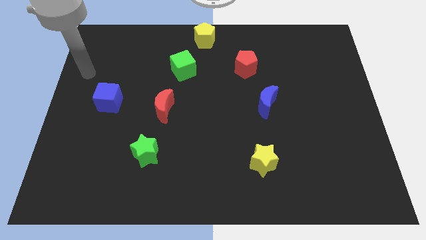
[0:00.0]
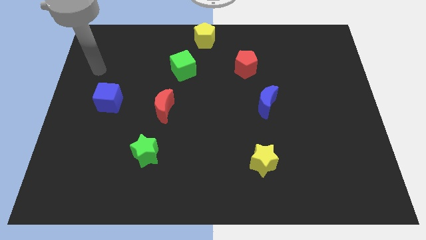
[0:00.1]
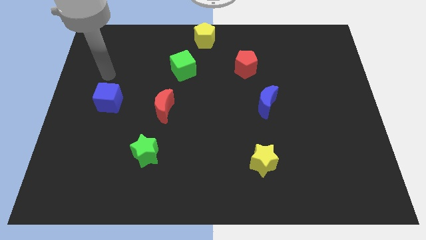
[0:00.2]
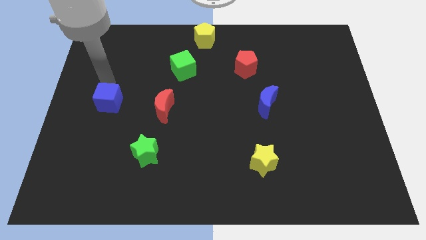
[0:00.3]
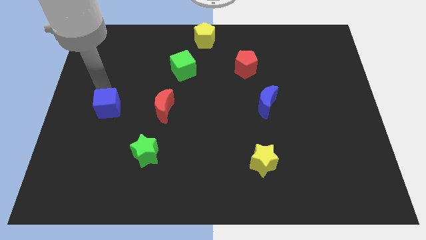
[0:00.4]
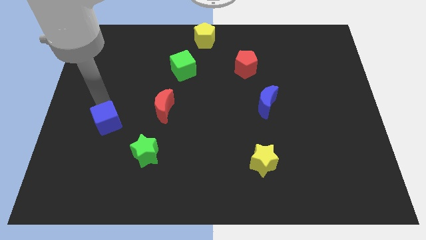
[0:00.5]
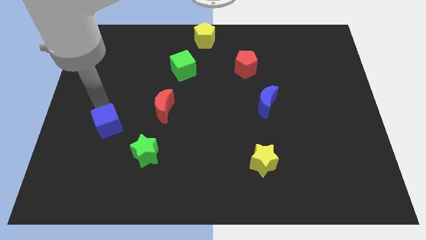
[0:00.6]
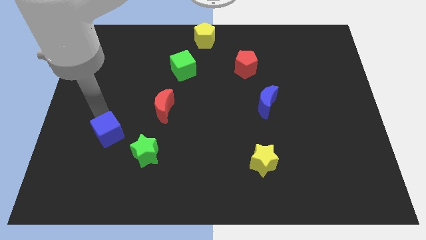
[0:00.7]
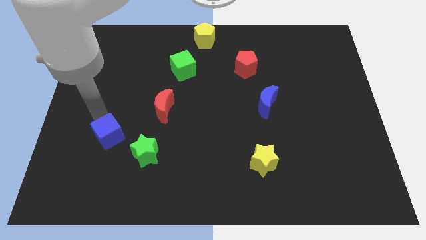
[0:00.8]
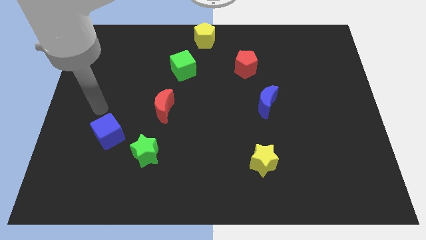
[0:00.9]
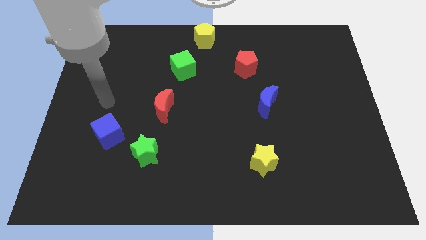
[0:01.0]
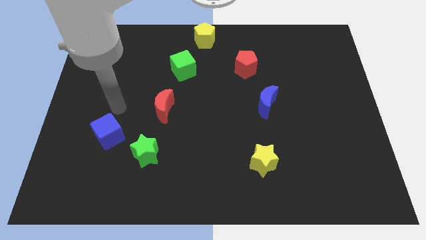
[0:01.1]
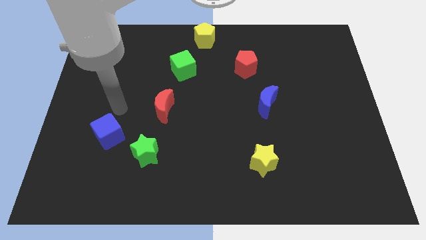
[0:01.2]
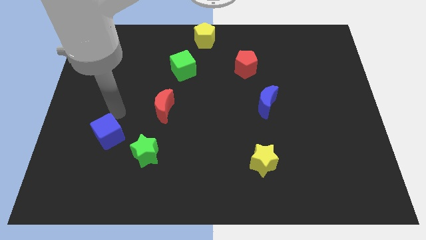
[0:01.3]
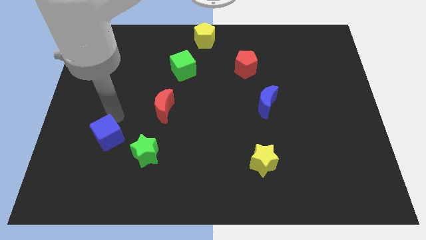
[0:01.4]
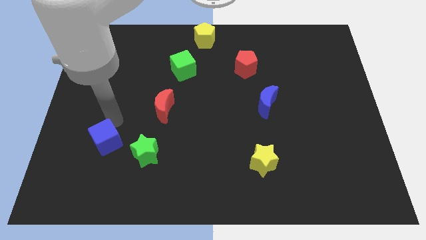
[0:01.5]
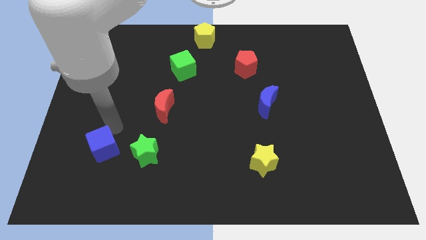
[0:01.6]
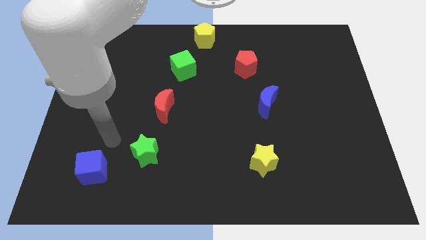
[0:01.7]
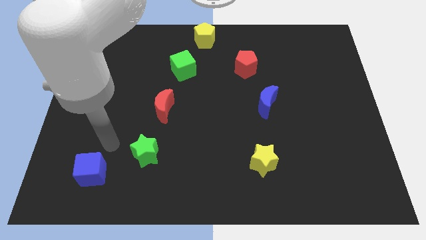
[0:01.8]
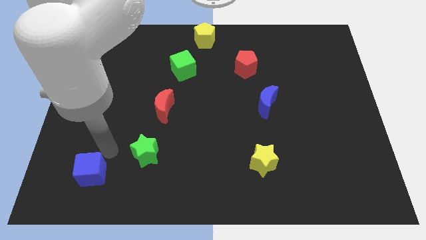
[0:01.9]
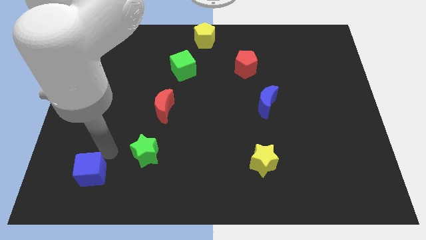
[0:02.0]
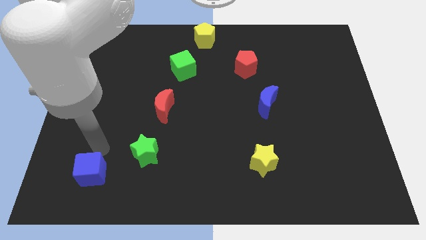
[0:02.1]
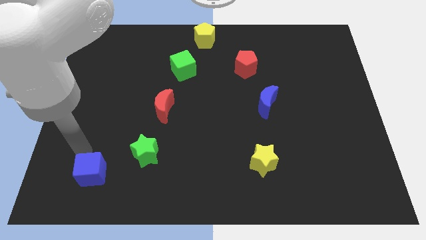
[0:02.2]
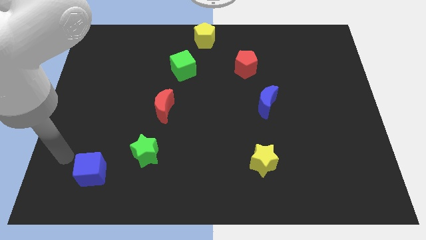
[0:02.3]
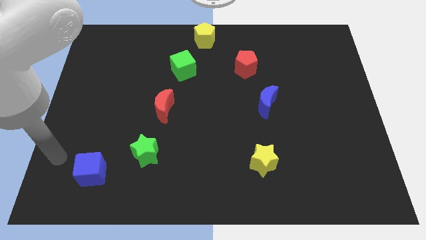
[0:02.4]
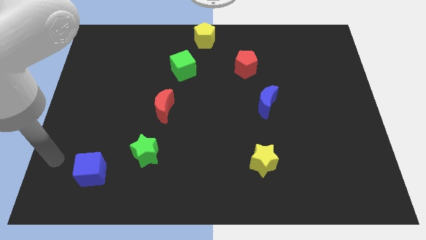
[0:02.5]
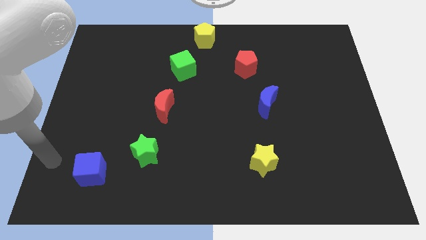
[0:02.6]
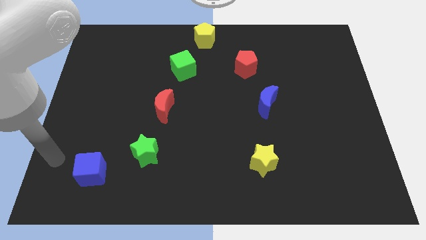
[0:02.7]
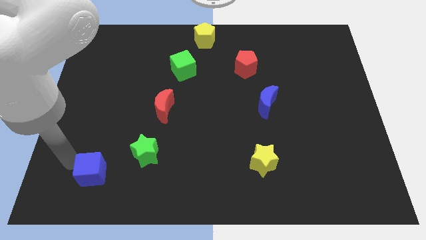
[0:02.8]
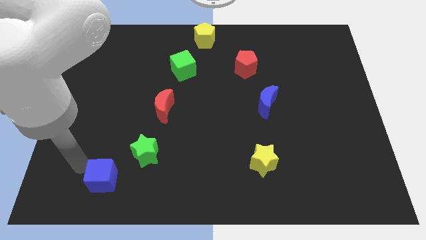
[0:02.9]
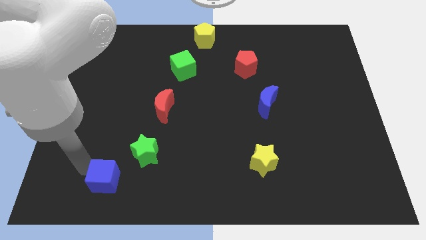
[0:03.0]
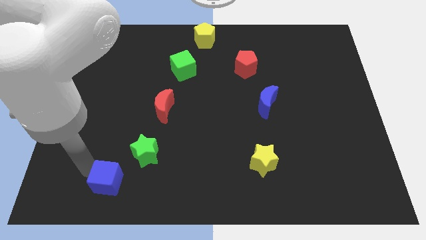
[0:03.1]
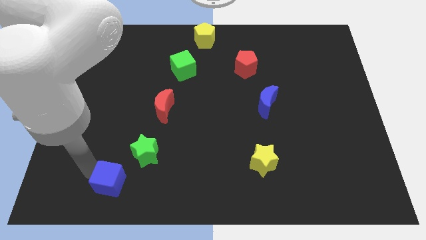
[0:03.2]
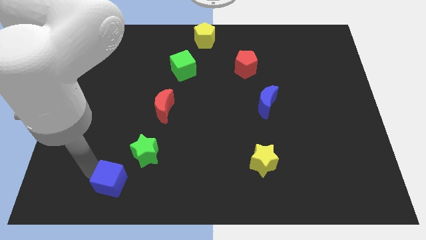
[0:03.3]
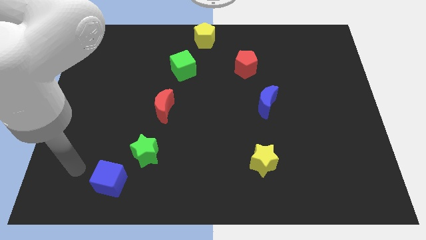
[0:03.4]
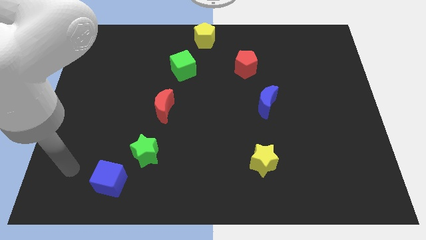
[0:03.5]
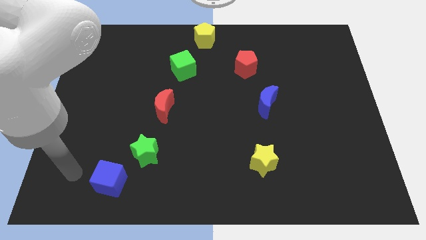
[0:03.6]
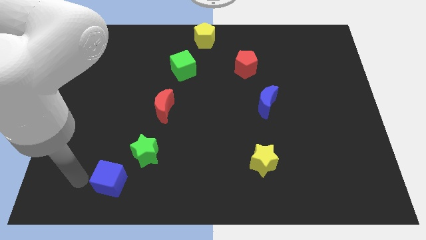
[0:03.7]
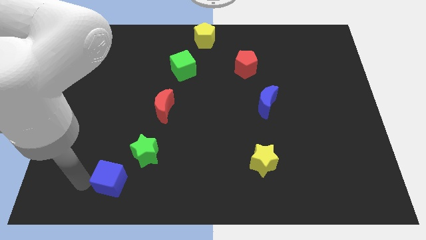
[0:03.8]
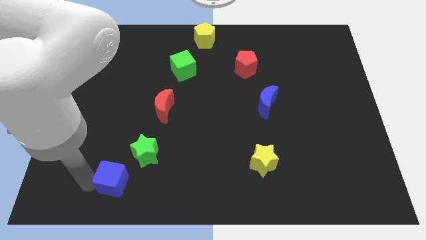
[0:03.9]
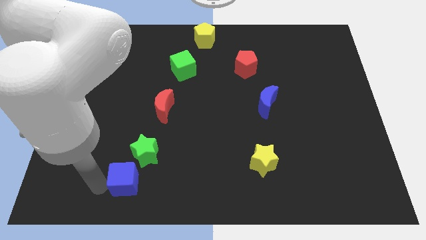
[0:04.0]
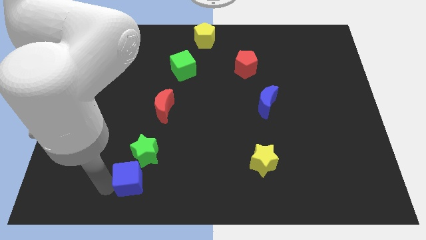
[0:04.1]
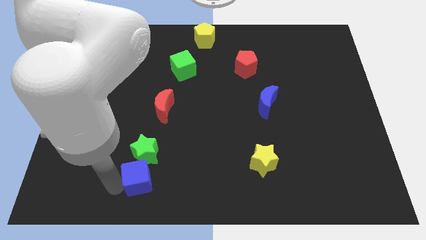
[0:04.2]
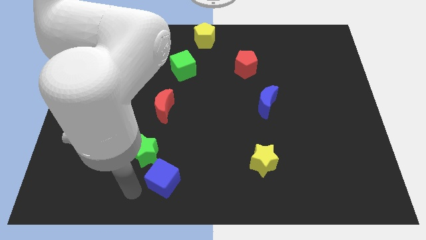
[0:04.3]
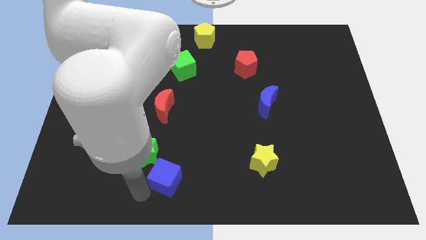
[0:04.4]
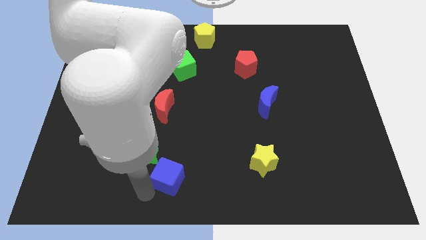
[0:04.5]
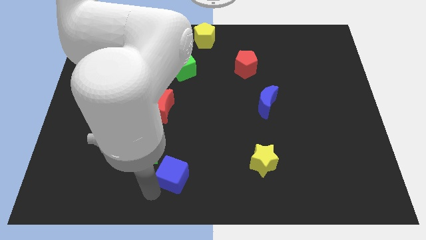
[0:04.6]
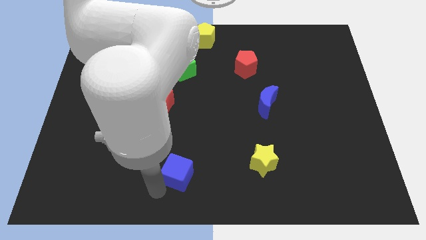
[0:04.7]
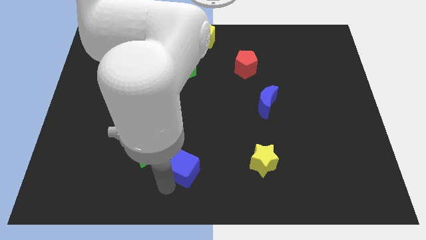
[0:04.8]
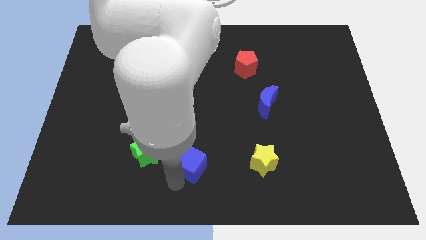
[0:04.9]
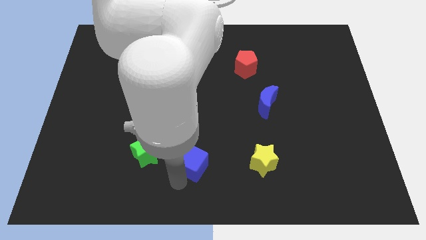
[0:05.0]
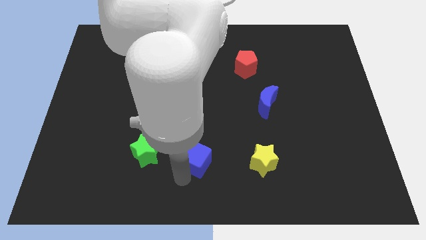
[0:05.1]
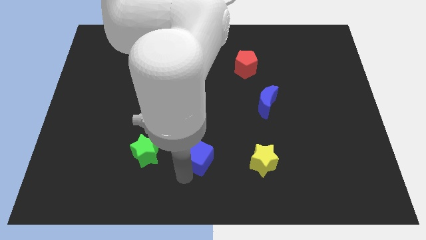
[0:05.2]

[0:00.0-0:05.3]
place the blue cube to the right of the green star

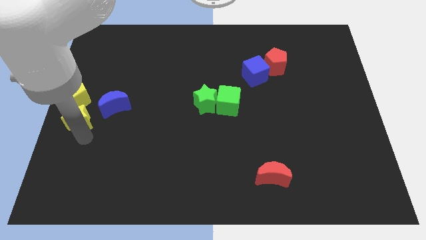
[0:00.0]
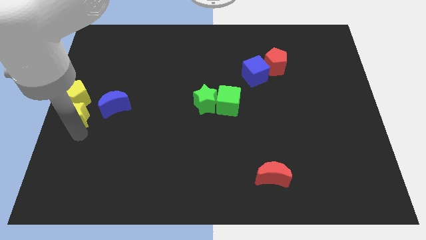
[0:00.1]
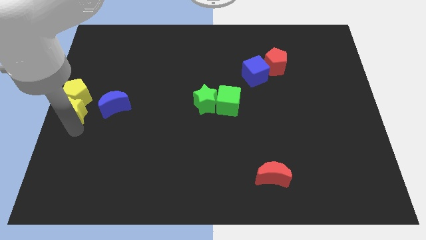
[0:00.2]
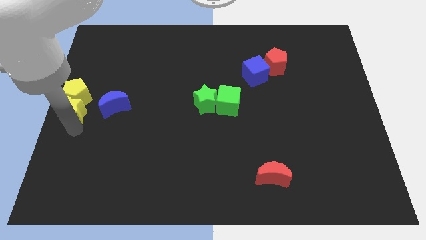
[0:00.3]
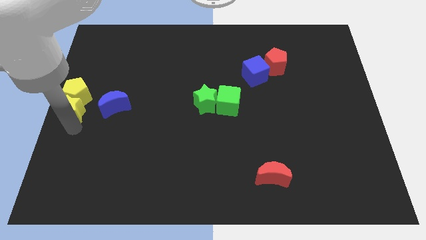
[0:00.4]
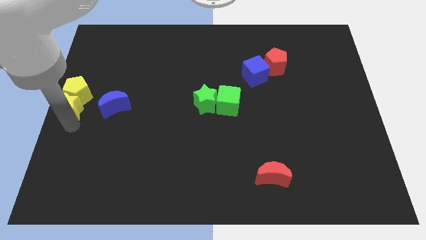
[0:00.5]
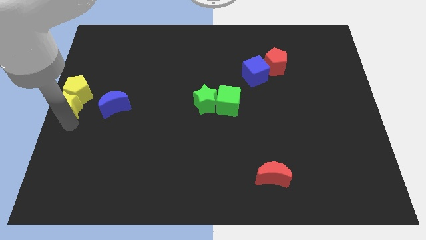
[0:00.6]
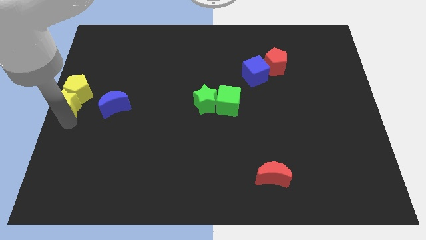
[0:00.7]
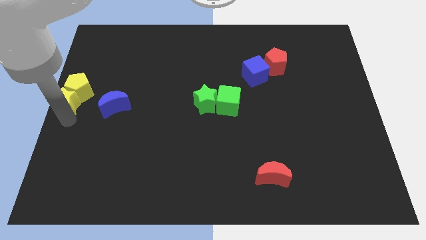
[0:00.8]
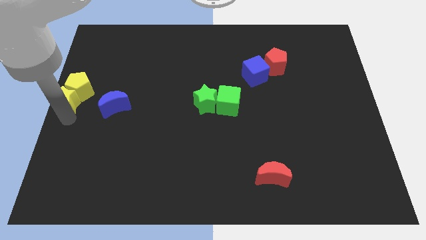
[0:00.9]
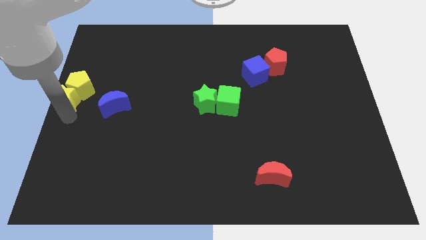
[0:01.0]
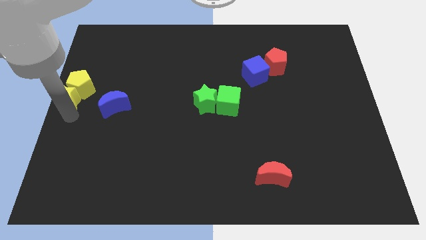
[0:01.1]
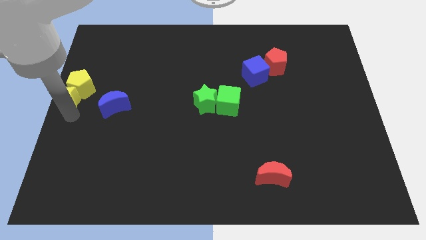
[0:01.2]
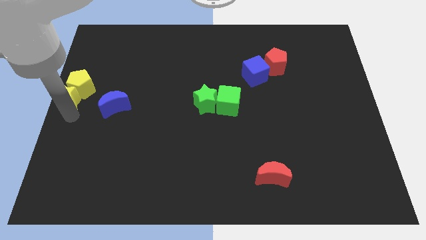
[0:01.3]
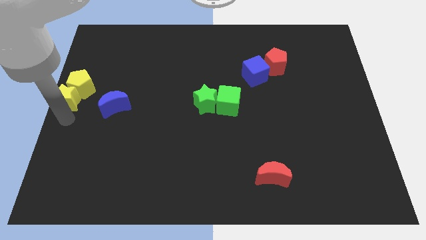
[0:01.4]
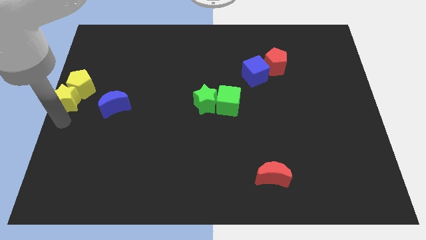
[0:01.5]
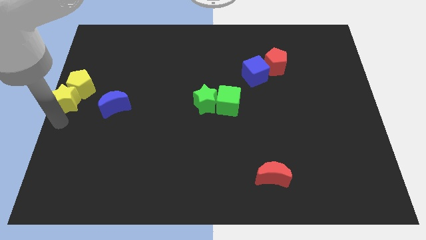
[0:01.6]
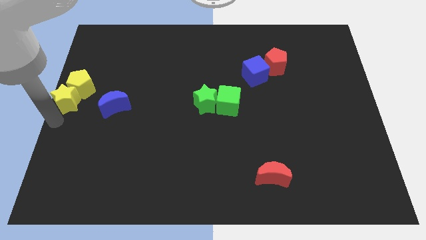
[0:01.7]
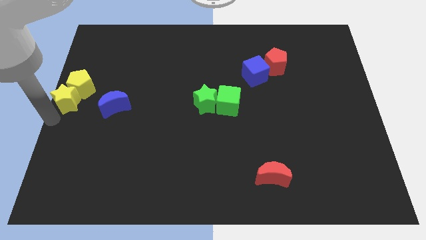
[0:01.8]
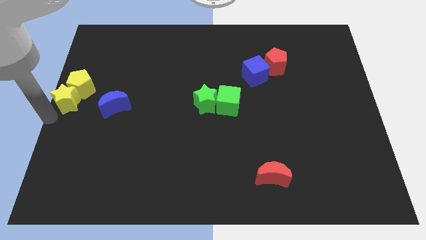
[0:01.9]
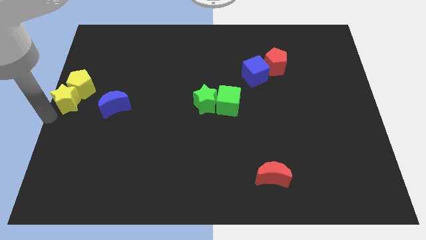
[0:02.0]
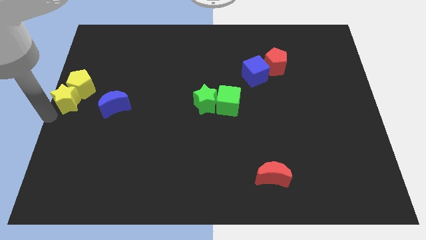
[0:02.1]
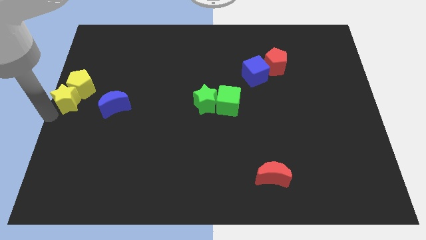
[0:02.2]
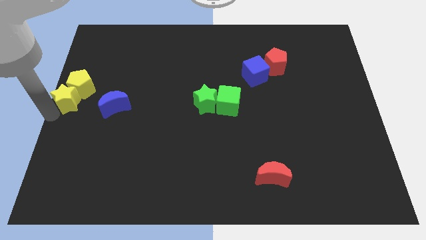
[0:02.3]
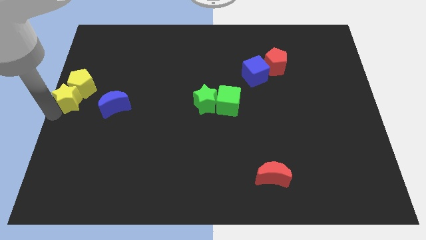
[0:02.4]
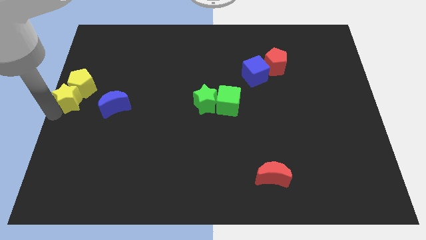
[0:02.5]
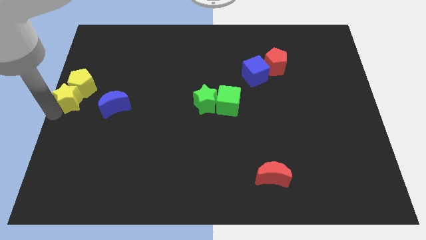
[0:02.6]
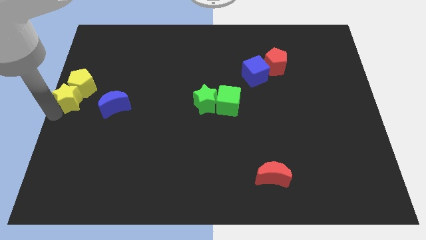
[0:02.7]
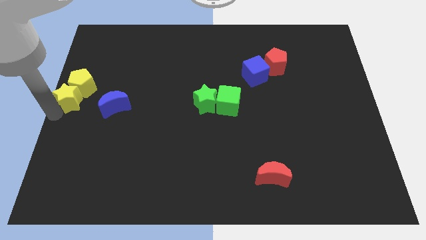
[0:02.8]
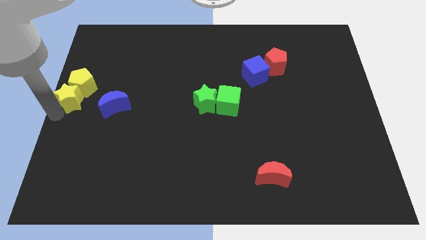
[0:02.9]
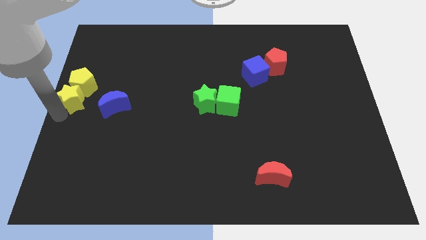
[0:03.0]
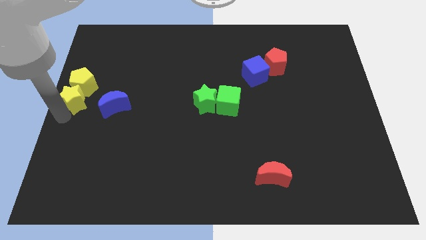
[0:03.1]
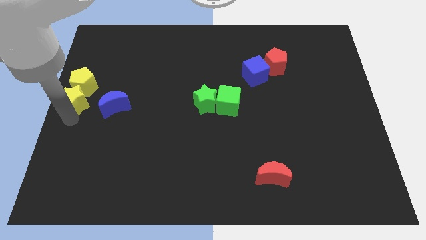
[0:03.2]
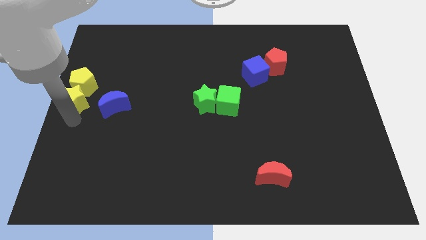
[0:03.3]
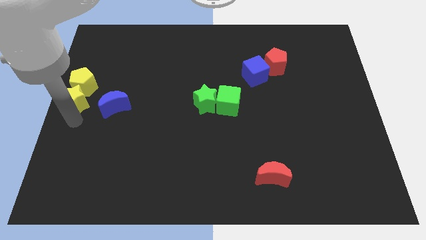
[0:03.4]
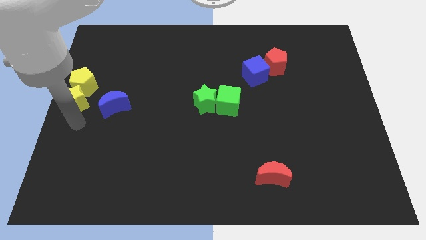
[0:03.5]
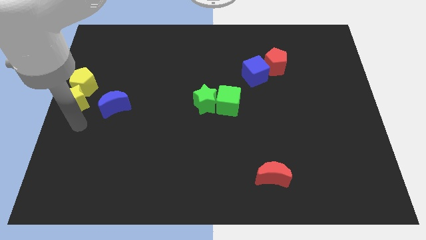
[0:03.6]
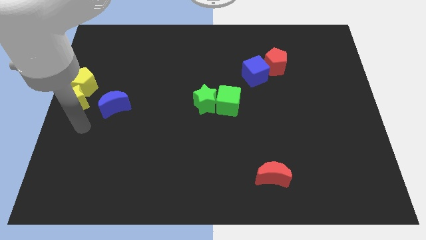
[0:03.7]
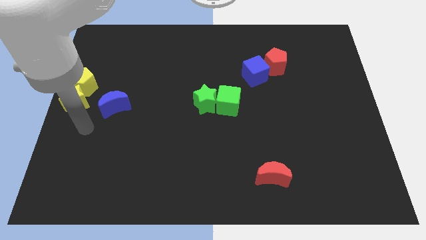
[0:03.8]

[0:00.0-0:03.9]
push the yellow star into the yellow pentagon
